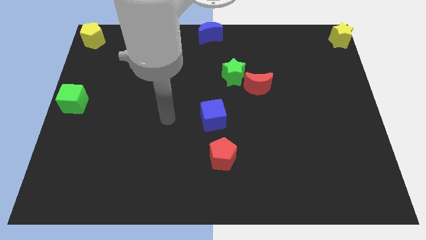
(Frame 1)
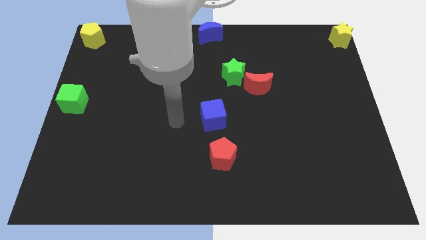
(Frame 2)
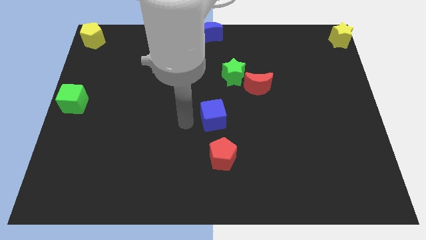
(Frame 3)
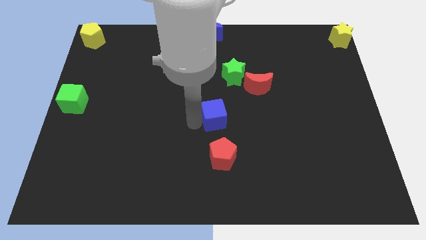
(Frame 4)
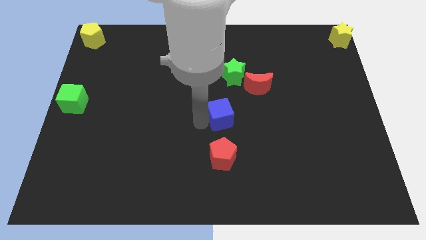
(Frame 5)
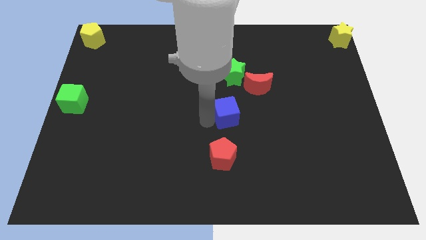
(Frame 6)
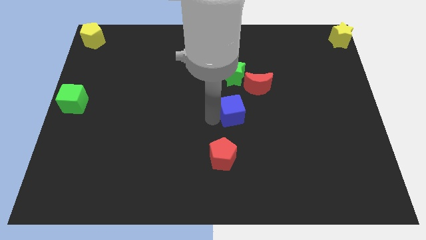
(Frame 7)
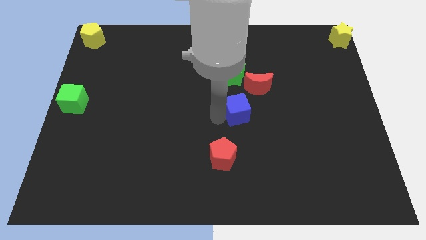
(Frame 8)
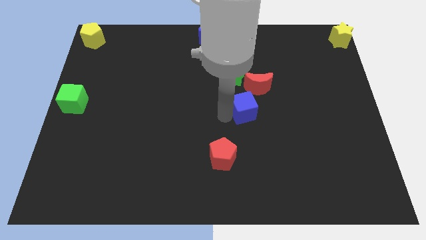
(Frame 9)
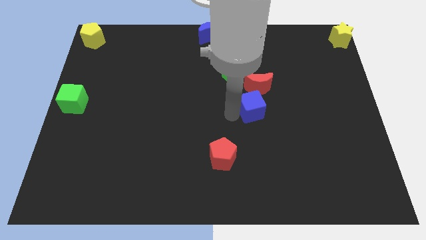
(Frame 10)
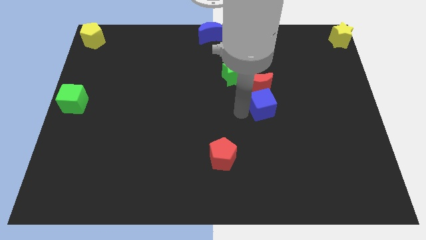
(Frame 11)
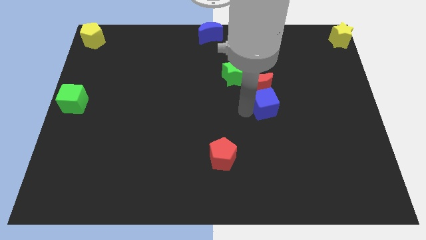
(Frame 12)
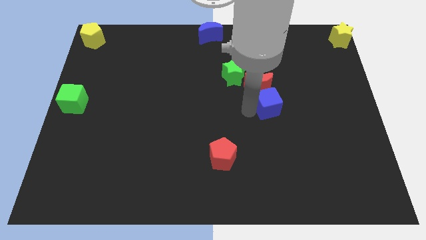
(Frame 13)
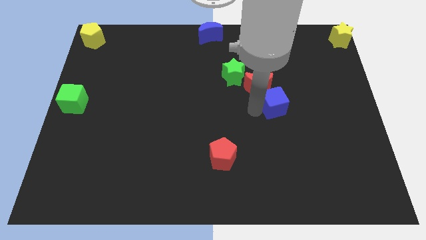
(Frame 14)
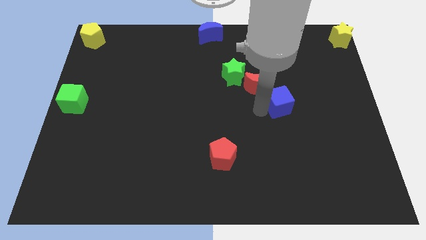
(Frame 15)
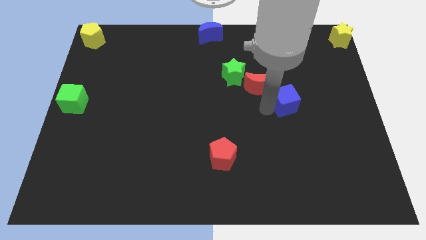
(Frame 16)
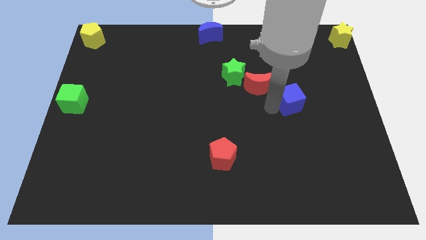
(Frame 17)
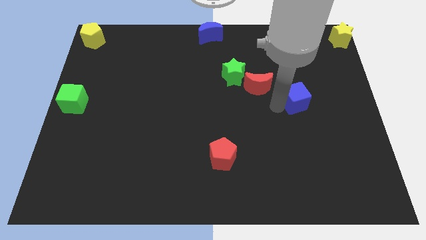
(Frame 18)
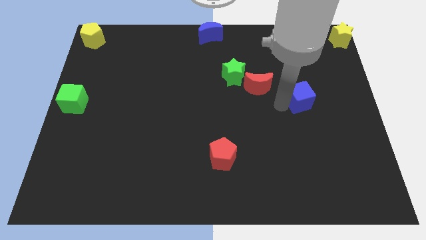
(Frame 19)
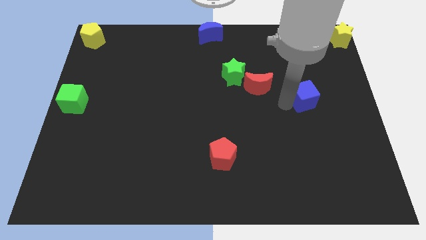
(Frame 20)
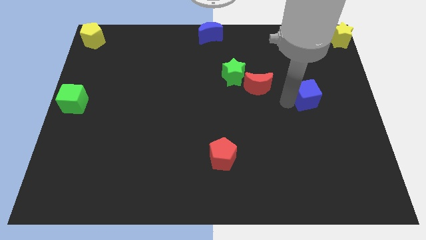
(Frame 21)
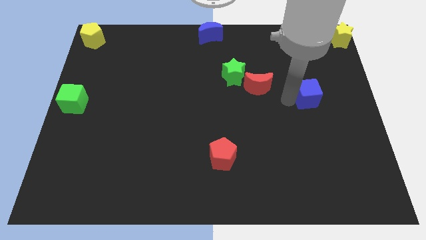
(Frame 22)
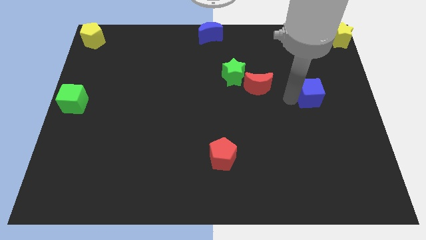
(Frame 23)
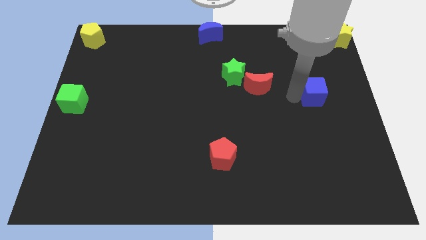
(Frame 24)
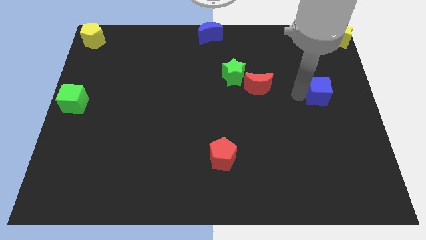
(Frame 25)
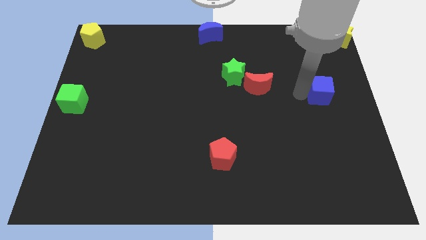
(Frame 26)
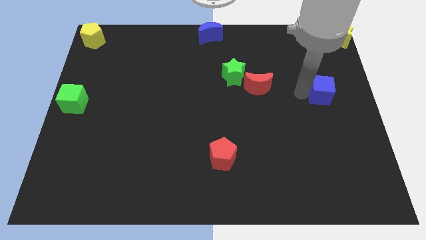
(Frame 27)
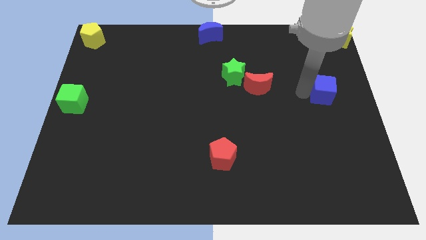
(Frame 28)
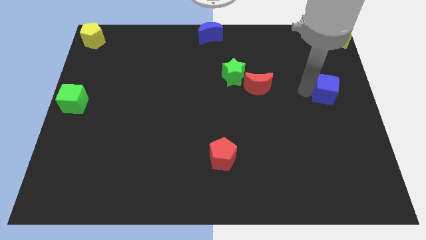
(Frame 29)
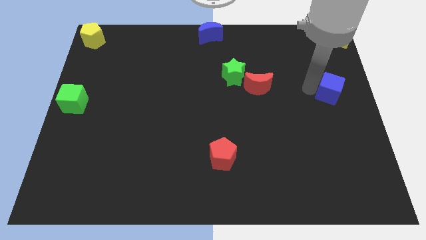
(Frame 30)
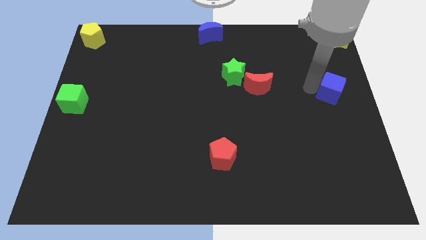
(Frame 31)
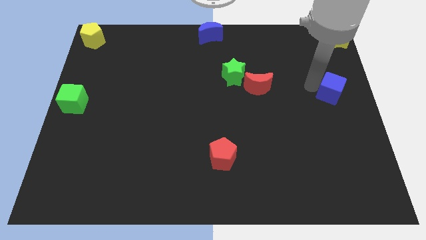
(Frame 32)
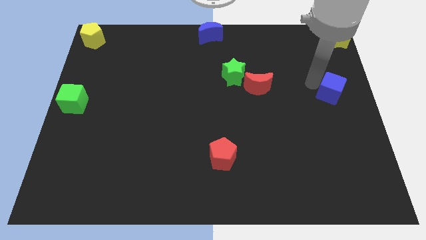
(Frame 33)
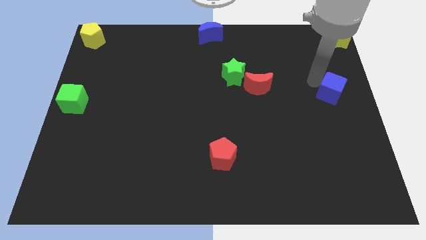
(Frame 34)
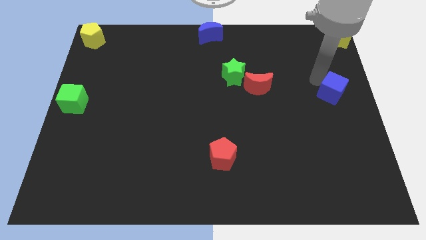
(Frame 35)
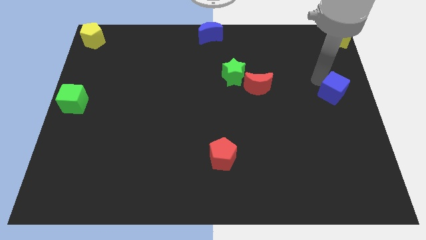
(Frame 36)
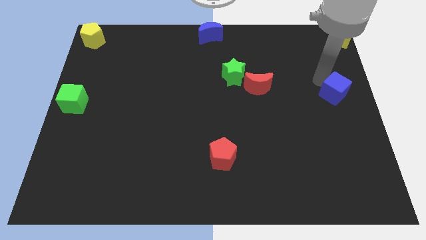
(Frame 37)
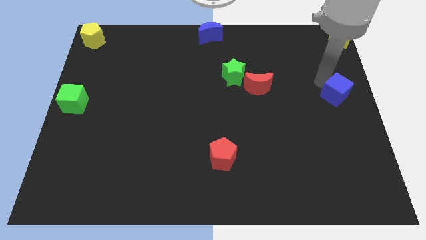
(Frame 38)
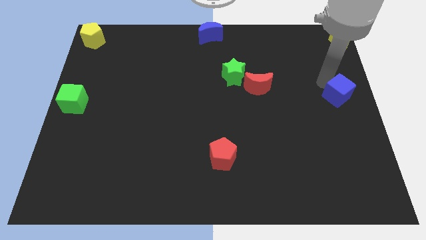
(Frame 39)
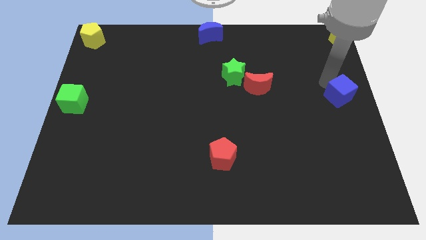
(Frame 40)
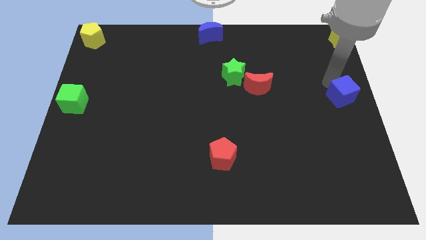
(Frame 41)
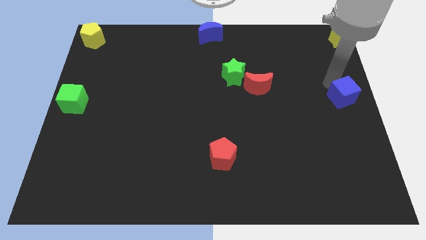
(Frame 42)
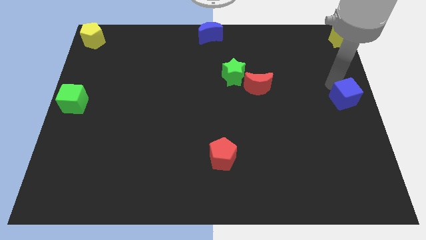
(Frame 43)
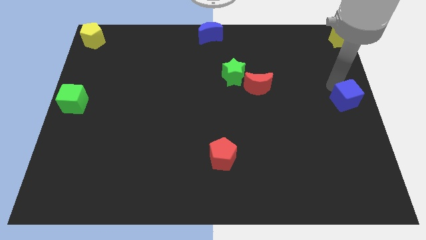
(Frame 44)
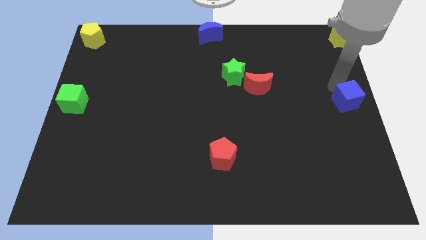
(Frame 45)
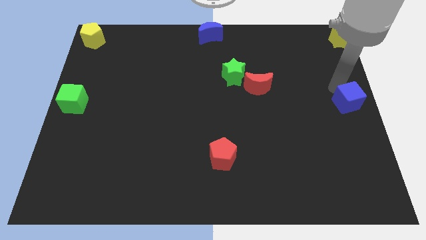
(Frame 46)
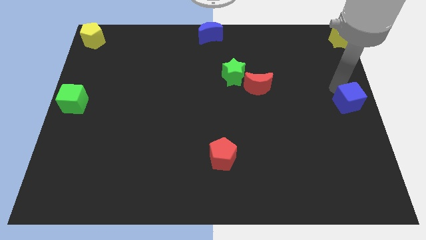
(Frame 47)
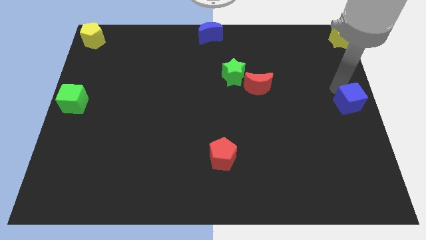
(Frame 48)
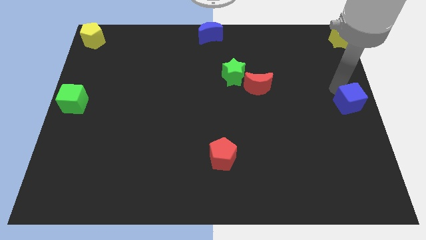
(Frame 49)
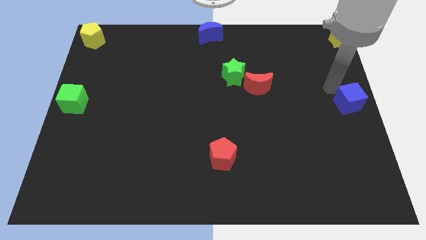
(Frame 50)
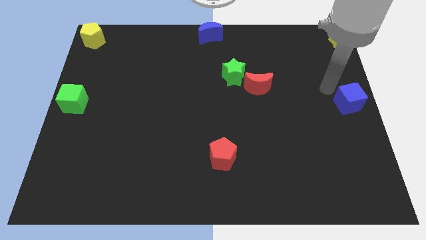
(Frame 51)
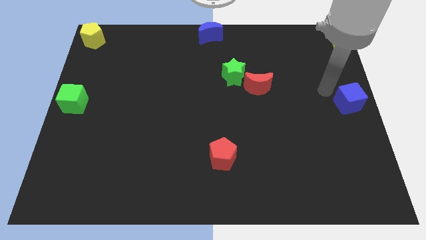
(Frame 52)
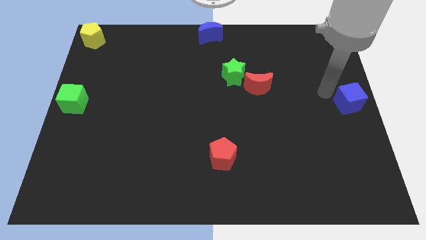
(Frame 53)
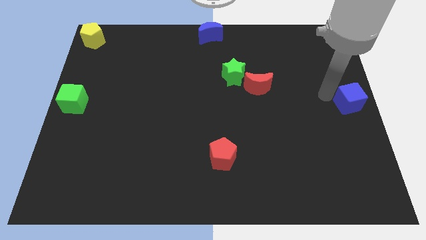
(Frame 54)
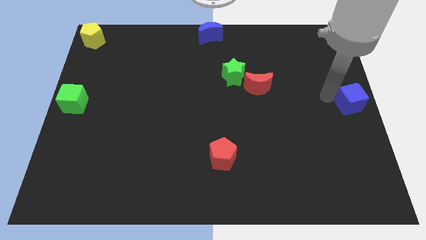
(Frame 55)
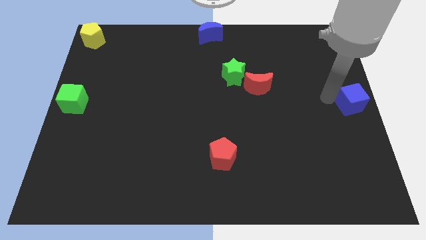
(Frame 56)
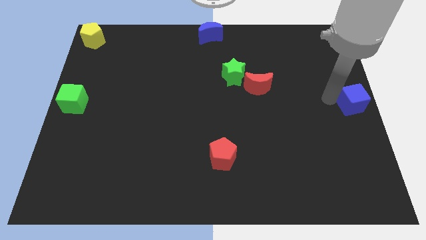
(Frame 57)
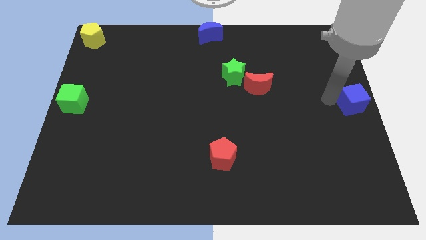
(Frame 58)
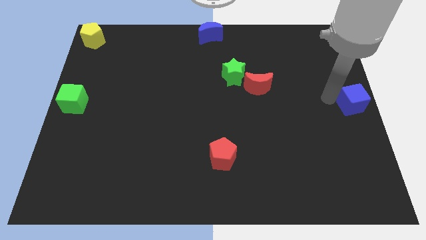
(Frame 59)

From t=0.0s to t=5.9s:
move the blue cube to the right center of the board

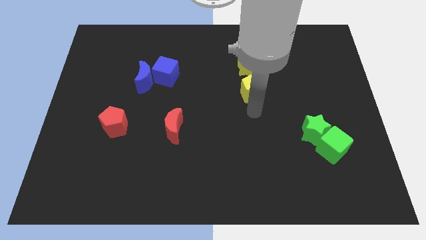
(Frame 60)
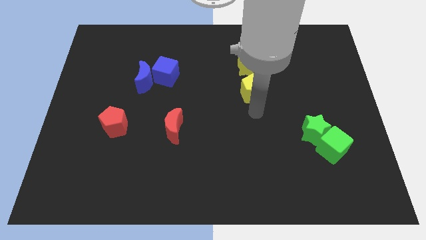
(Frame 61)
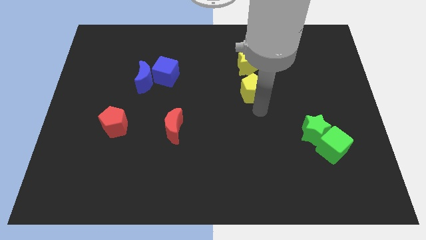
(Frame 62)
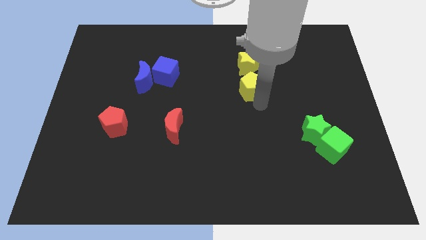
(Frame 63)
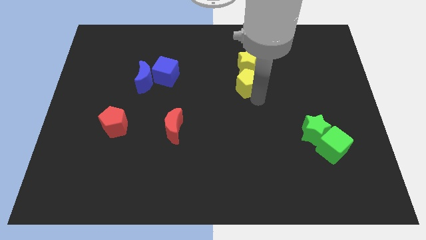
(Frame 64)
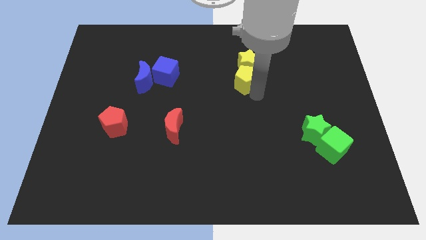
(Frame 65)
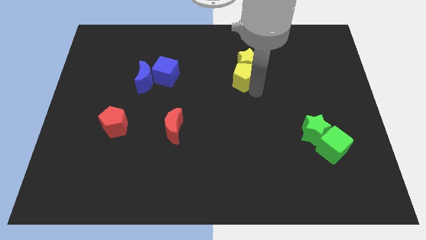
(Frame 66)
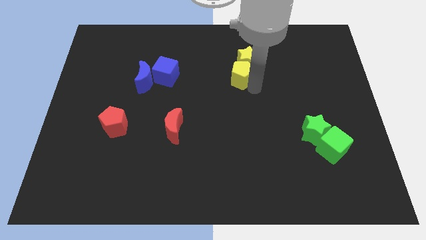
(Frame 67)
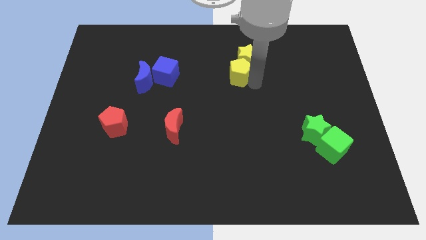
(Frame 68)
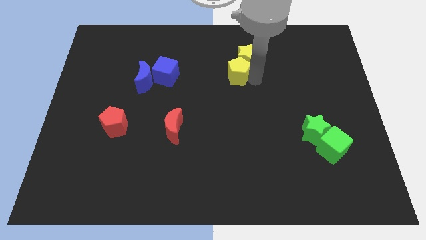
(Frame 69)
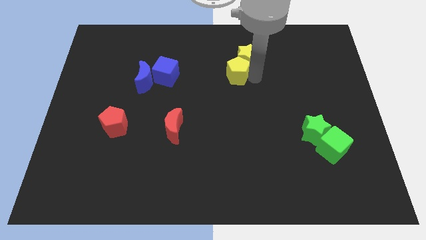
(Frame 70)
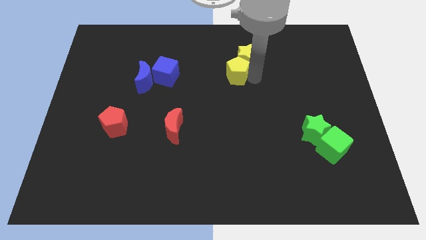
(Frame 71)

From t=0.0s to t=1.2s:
put the yellow pentagon at the bottom left of the yellow star

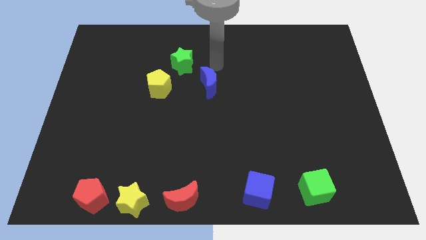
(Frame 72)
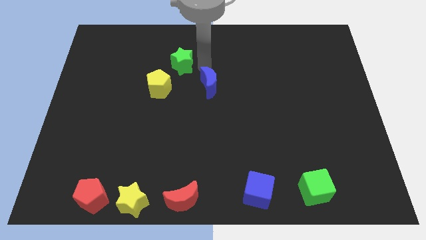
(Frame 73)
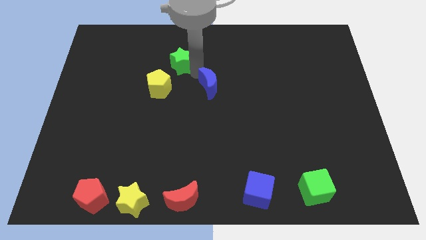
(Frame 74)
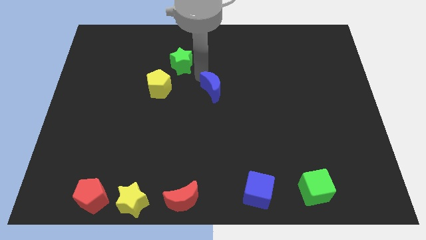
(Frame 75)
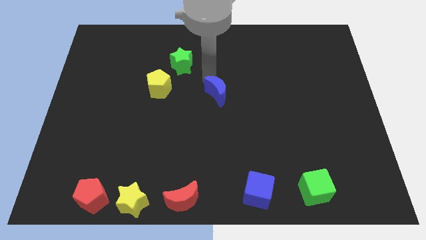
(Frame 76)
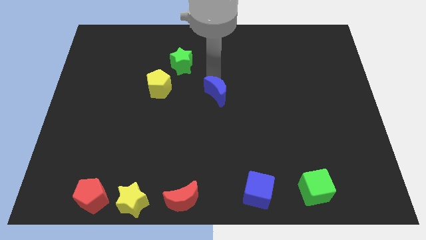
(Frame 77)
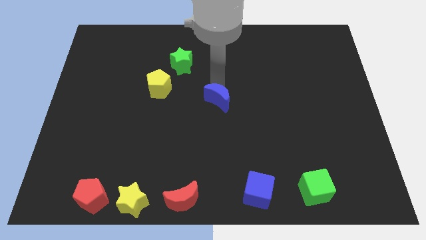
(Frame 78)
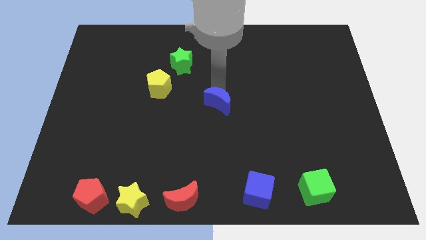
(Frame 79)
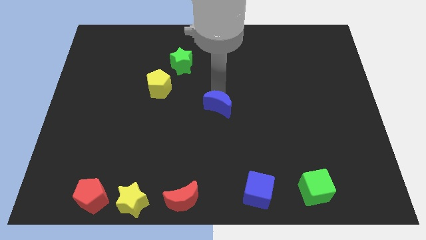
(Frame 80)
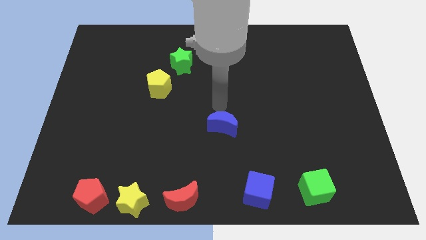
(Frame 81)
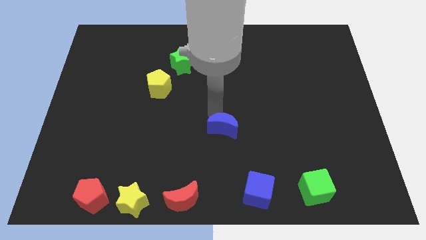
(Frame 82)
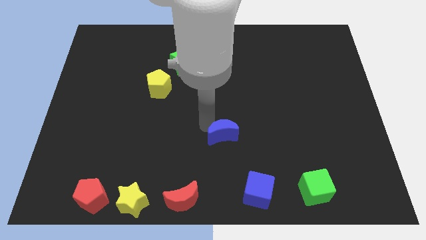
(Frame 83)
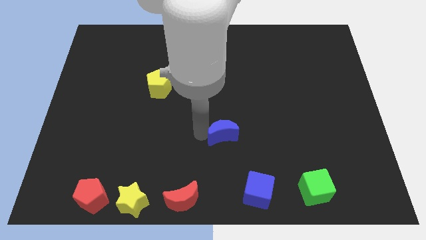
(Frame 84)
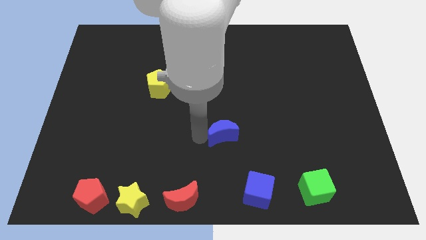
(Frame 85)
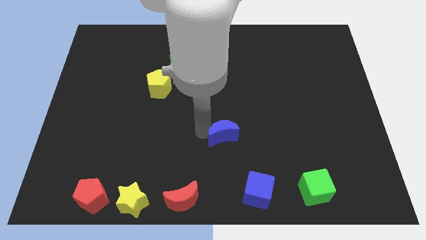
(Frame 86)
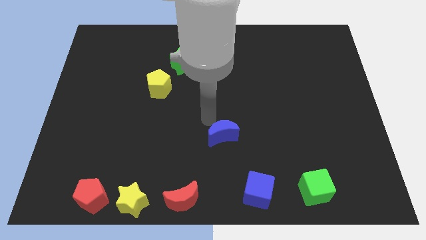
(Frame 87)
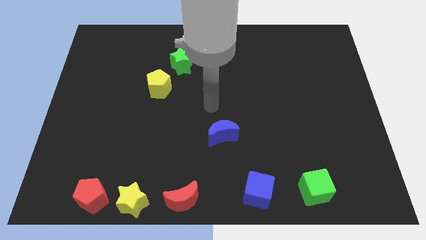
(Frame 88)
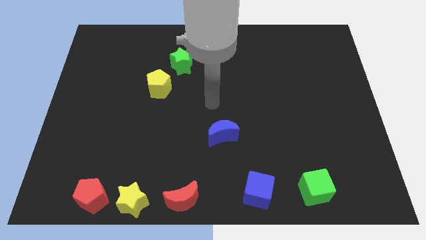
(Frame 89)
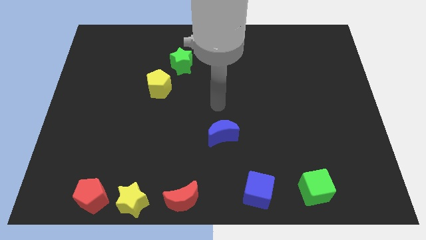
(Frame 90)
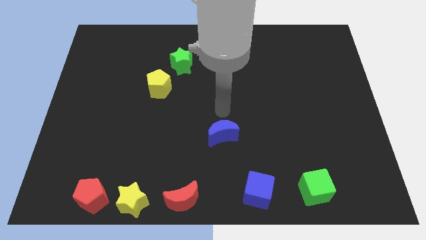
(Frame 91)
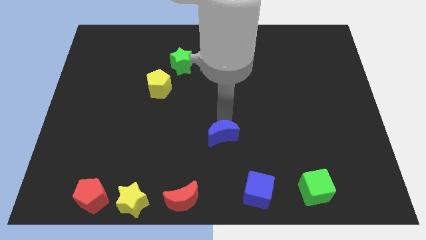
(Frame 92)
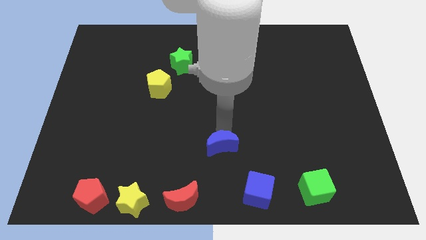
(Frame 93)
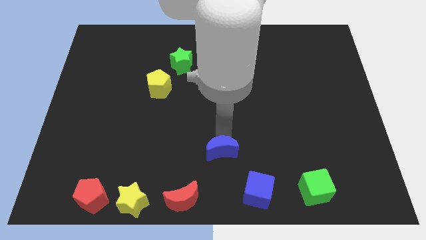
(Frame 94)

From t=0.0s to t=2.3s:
push the blue crescent towards the bottom side of the board
